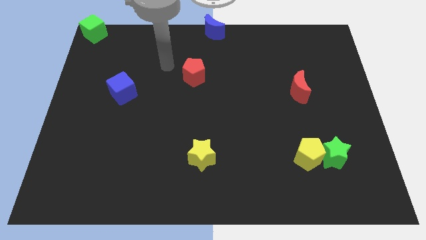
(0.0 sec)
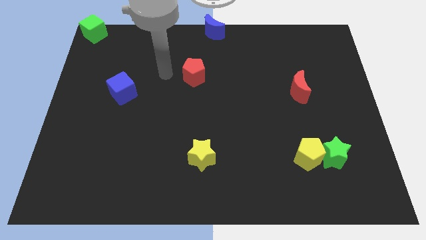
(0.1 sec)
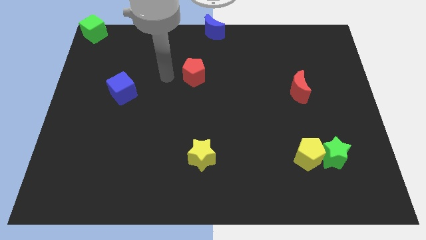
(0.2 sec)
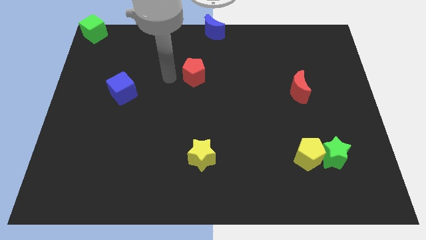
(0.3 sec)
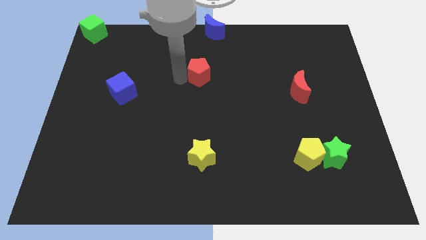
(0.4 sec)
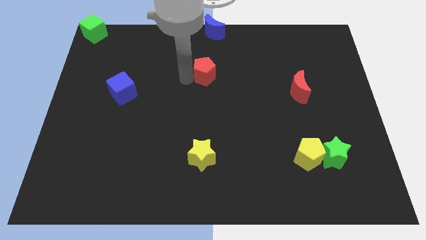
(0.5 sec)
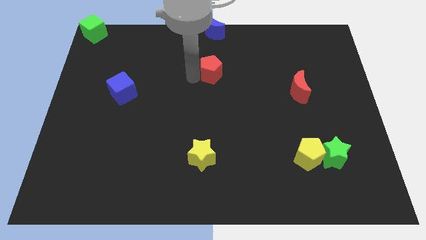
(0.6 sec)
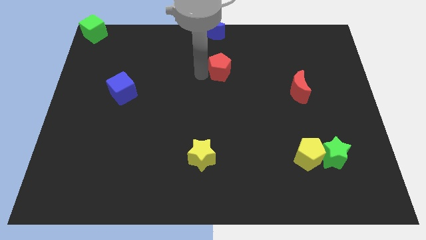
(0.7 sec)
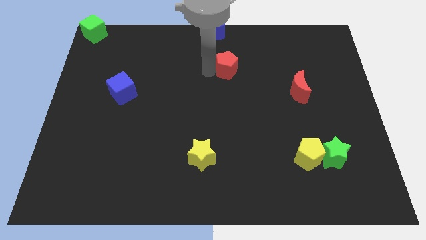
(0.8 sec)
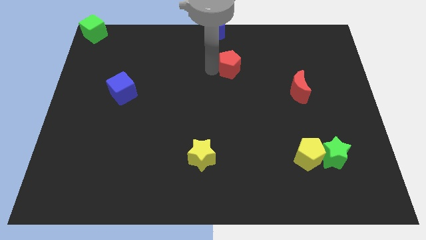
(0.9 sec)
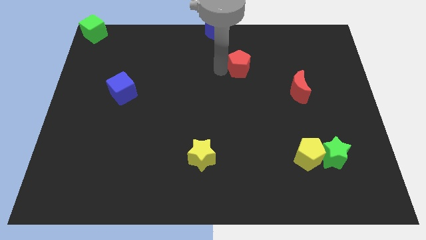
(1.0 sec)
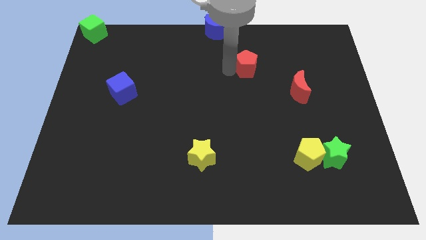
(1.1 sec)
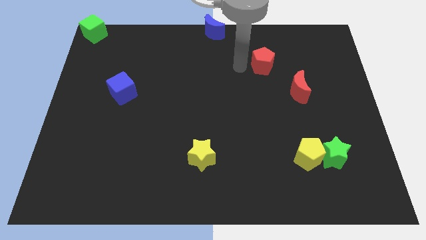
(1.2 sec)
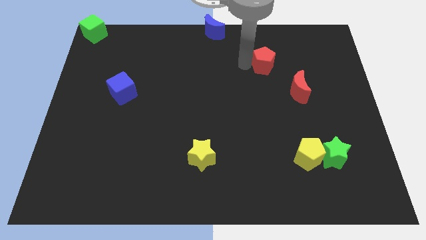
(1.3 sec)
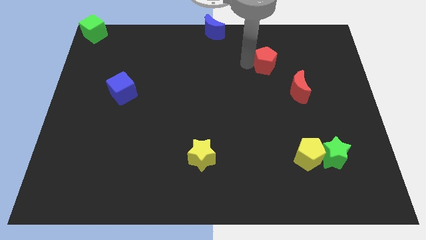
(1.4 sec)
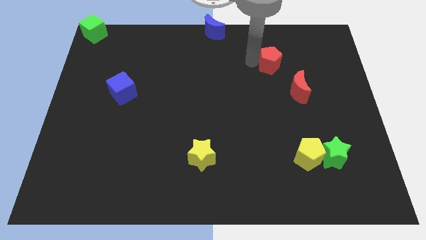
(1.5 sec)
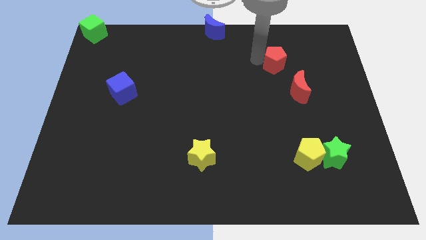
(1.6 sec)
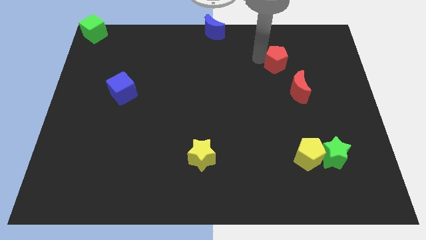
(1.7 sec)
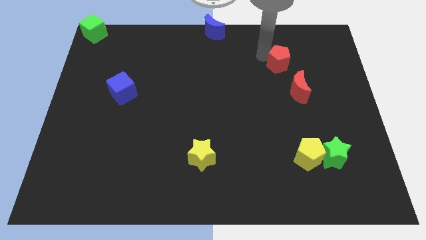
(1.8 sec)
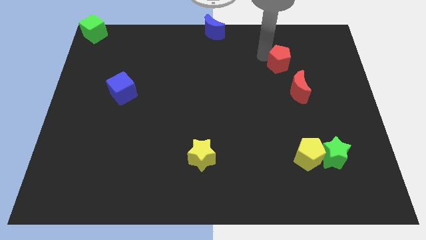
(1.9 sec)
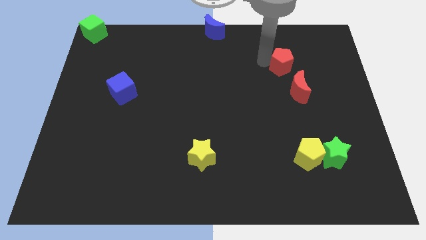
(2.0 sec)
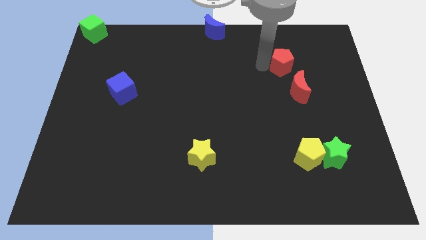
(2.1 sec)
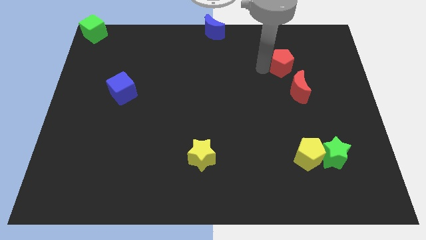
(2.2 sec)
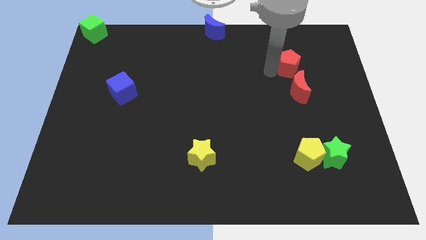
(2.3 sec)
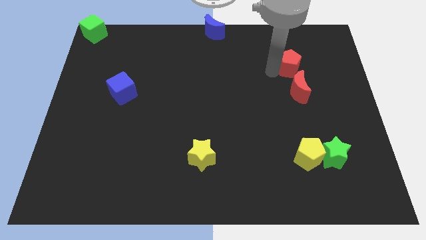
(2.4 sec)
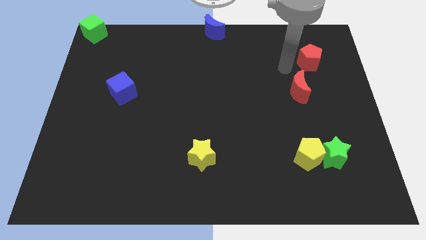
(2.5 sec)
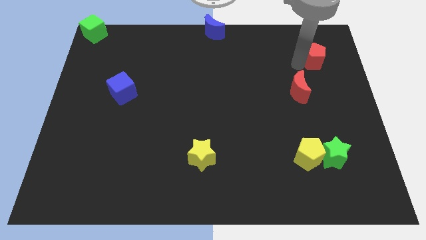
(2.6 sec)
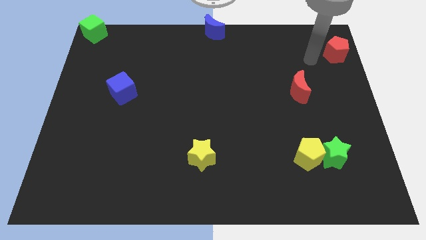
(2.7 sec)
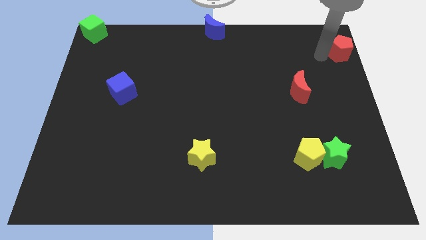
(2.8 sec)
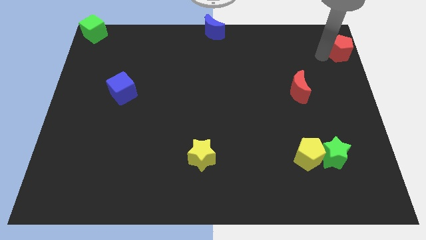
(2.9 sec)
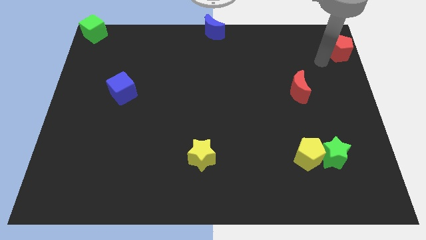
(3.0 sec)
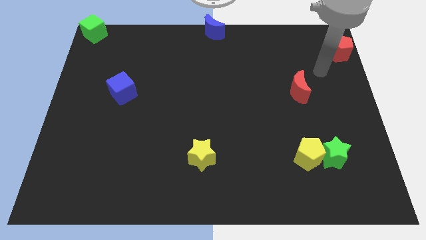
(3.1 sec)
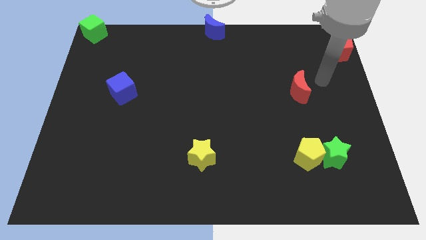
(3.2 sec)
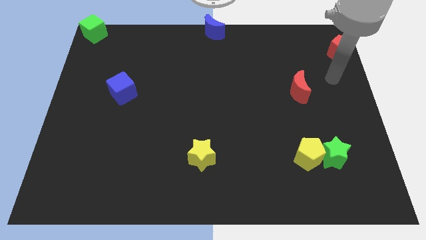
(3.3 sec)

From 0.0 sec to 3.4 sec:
move the red pentagon to the top right

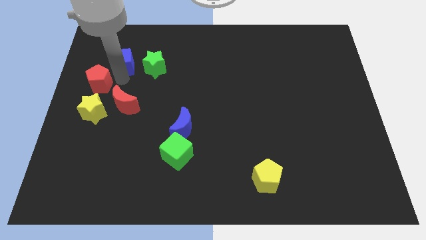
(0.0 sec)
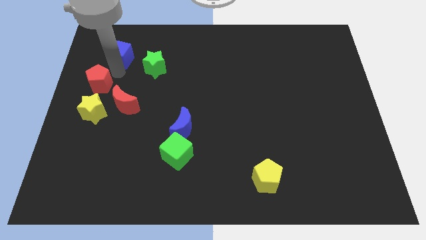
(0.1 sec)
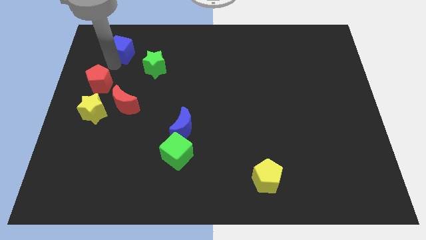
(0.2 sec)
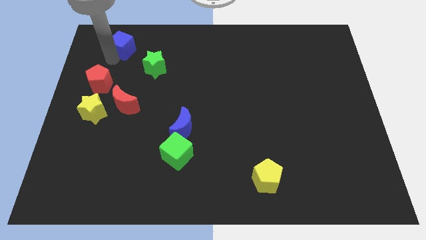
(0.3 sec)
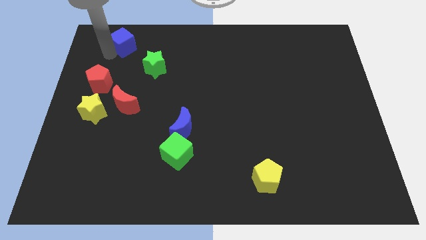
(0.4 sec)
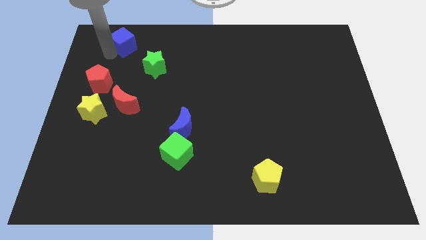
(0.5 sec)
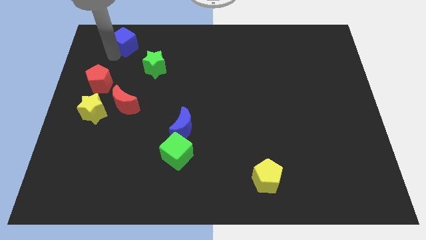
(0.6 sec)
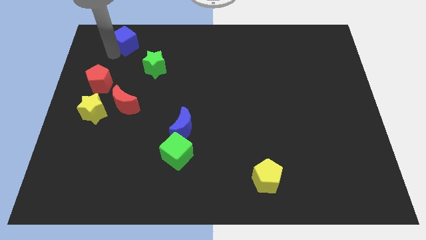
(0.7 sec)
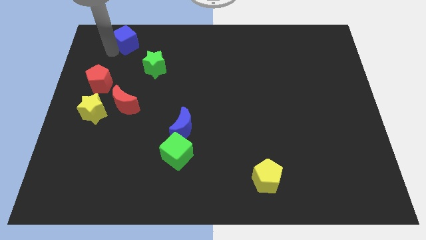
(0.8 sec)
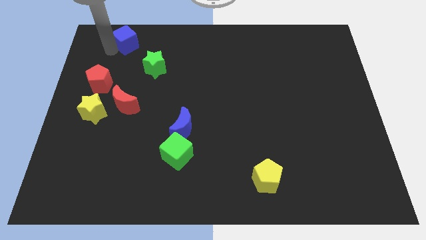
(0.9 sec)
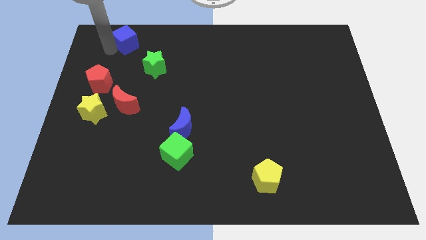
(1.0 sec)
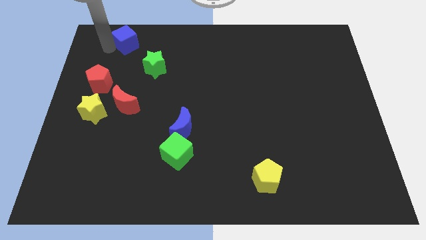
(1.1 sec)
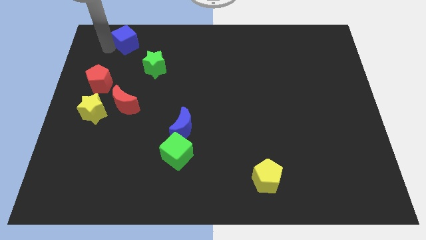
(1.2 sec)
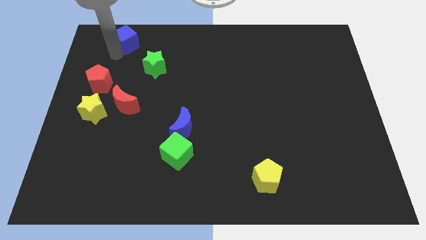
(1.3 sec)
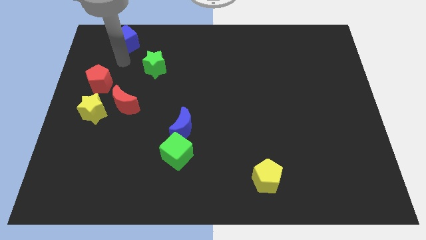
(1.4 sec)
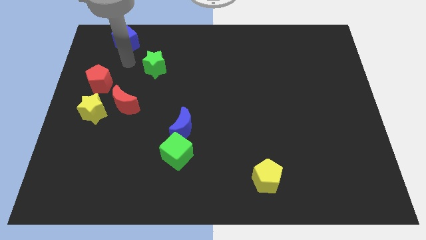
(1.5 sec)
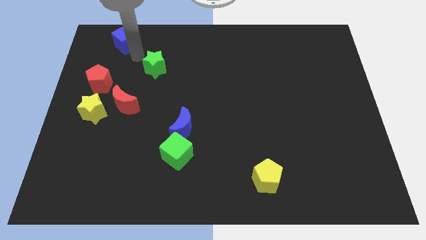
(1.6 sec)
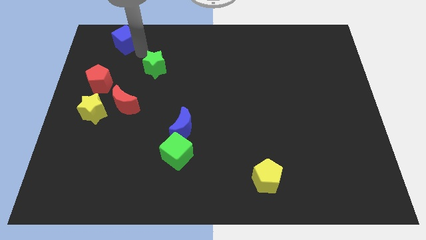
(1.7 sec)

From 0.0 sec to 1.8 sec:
move the blue cube to the top of th board

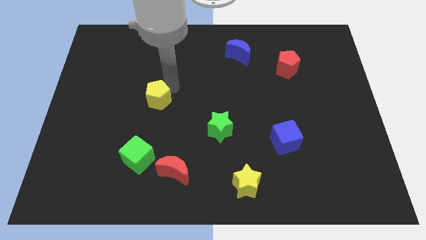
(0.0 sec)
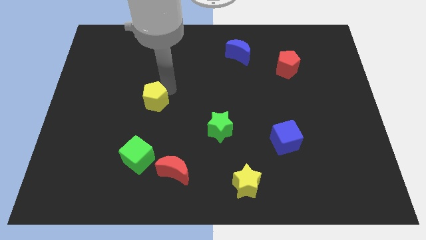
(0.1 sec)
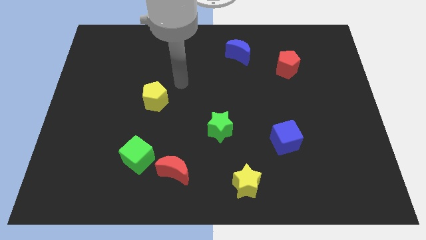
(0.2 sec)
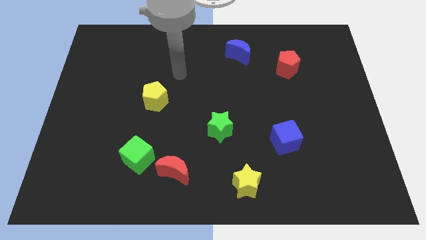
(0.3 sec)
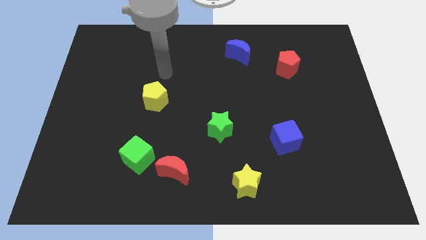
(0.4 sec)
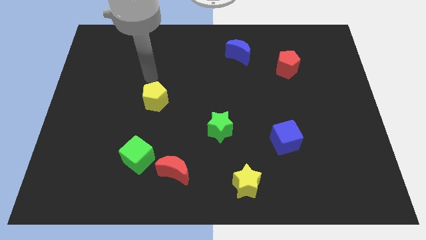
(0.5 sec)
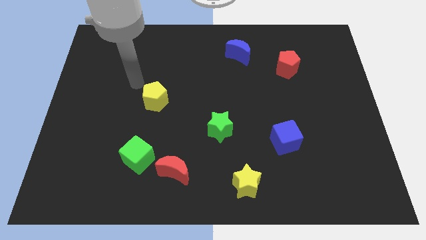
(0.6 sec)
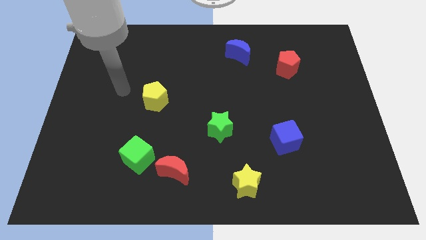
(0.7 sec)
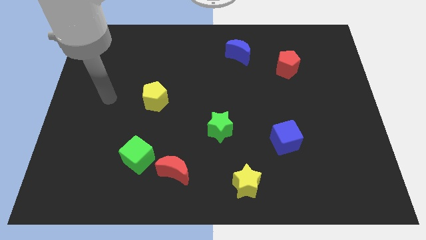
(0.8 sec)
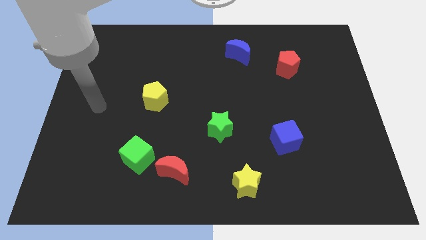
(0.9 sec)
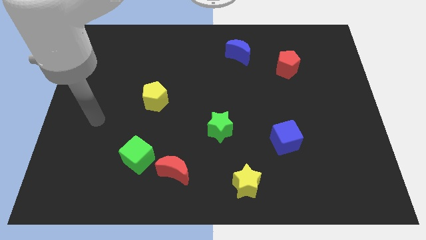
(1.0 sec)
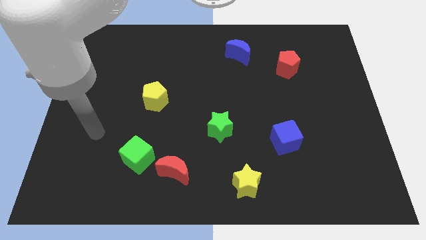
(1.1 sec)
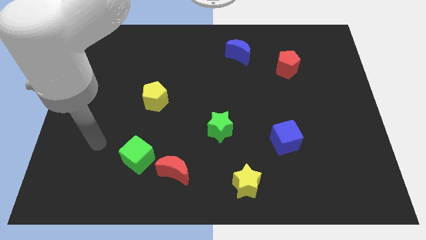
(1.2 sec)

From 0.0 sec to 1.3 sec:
move arm away from the yellow pentagon

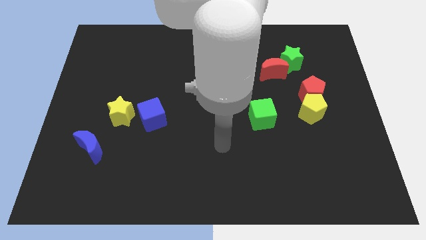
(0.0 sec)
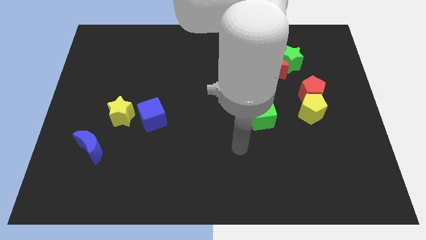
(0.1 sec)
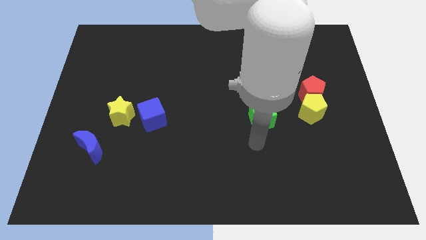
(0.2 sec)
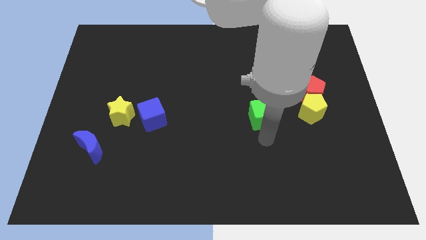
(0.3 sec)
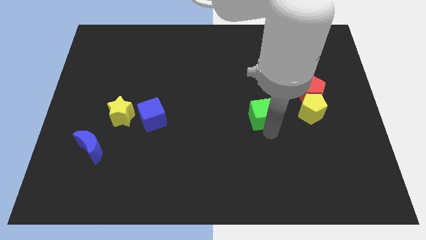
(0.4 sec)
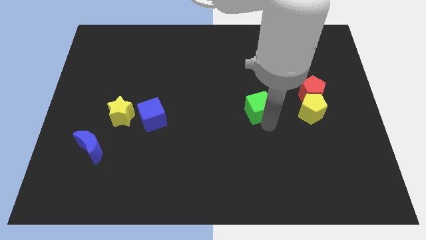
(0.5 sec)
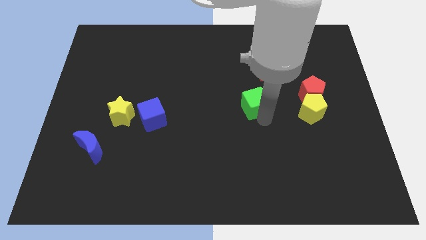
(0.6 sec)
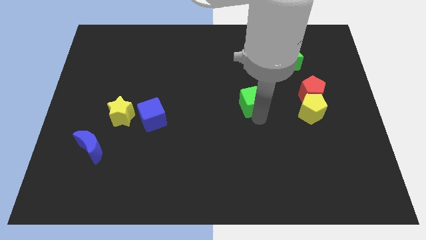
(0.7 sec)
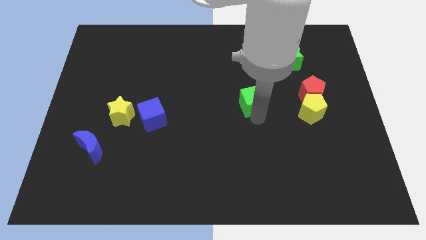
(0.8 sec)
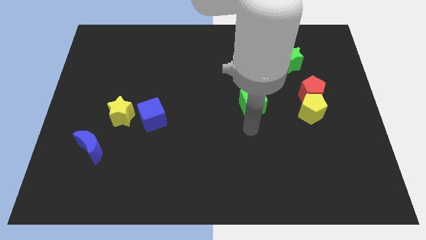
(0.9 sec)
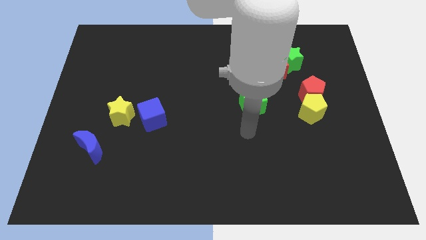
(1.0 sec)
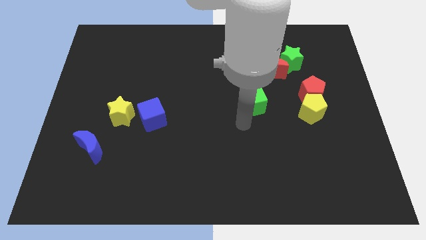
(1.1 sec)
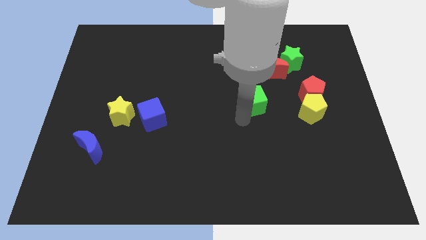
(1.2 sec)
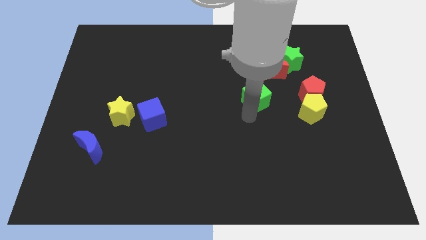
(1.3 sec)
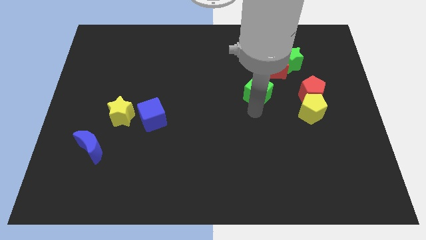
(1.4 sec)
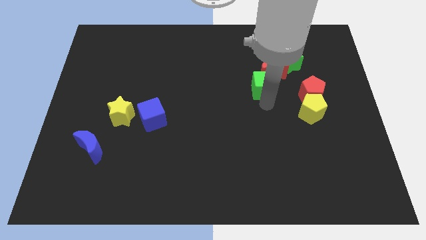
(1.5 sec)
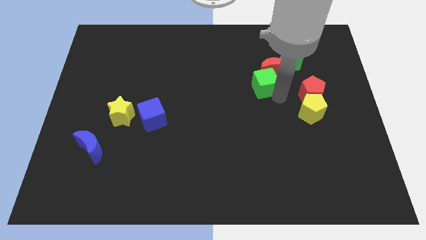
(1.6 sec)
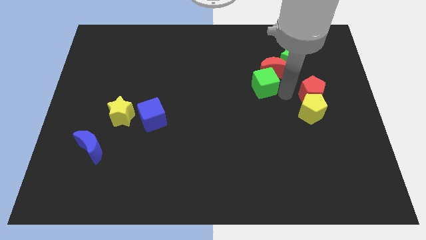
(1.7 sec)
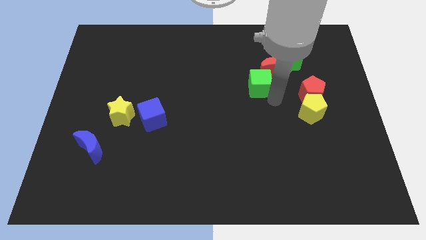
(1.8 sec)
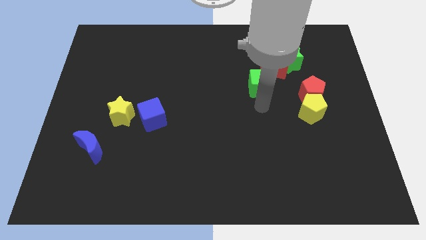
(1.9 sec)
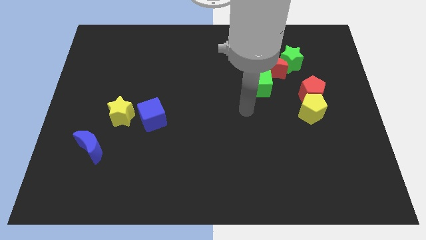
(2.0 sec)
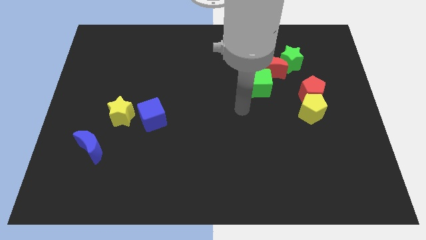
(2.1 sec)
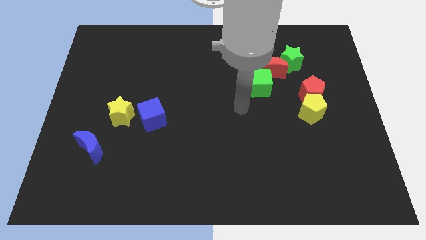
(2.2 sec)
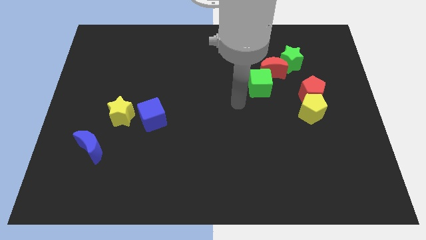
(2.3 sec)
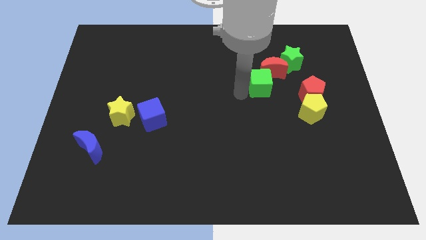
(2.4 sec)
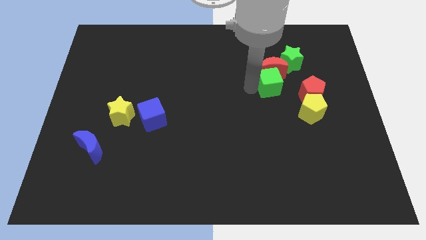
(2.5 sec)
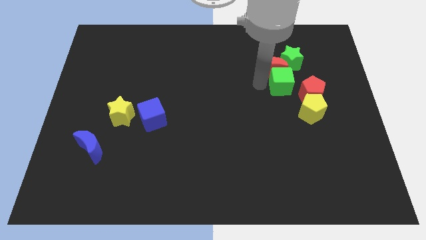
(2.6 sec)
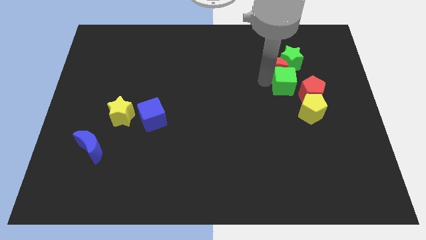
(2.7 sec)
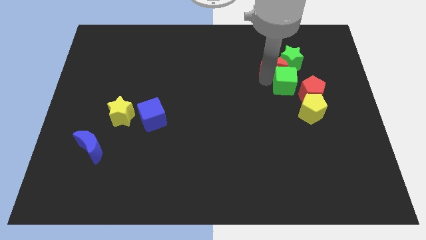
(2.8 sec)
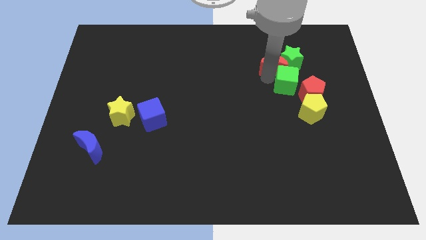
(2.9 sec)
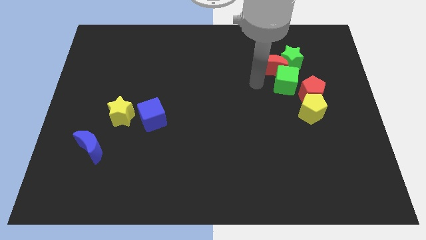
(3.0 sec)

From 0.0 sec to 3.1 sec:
move the green cube below the red moon
